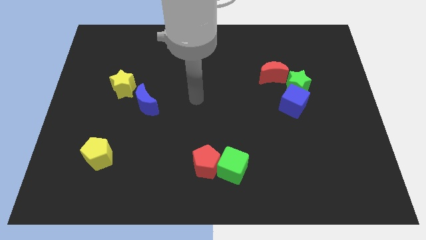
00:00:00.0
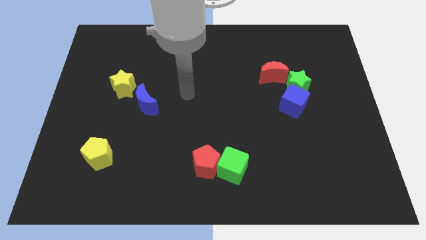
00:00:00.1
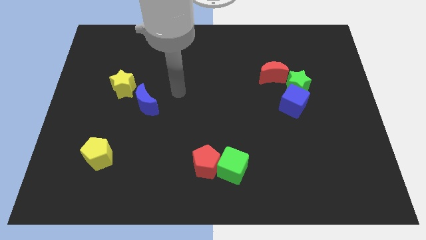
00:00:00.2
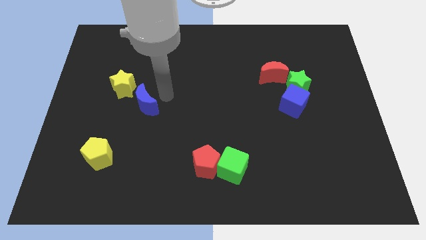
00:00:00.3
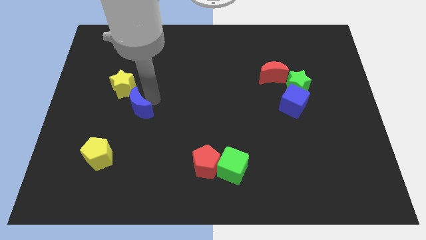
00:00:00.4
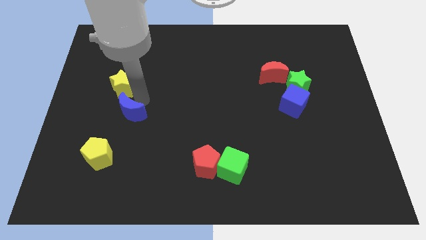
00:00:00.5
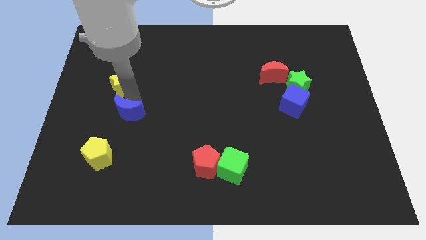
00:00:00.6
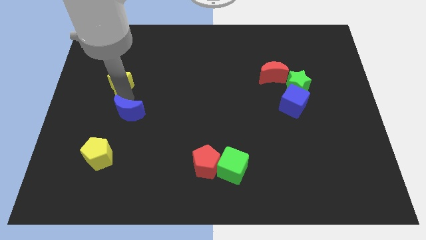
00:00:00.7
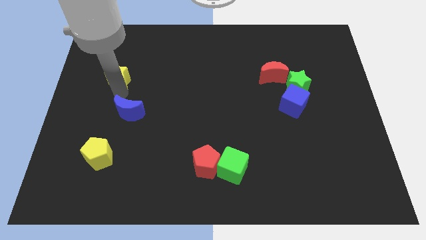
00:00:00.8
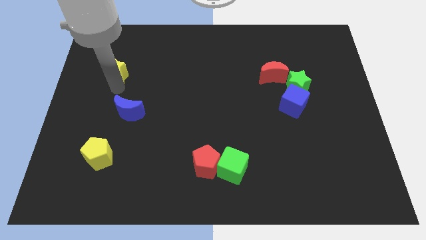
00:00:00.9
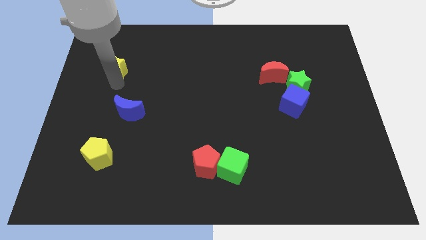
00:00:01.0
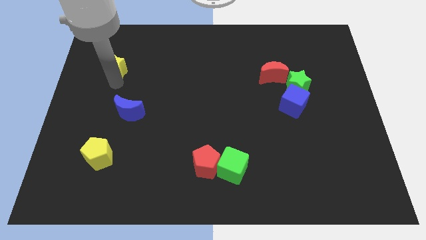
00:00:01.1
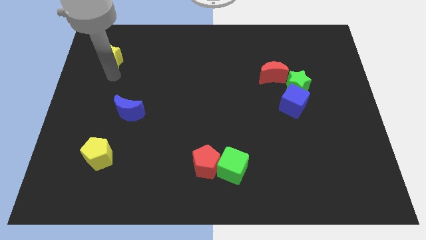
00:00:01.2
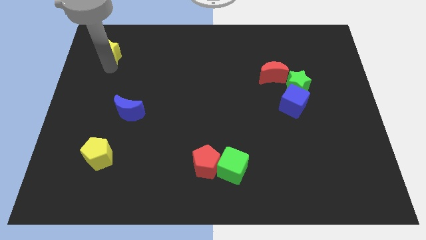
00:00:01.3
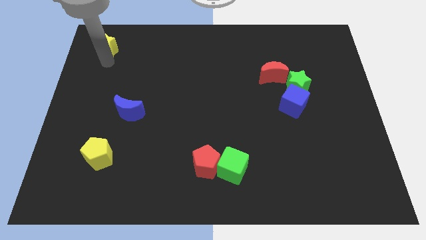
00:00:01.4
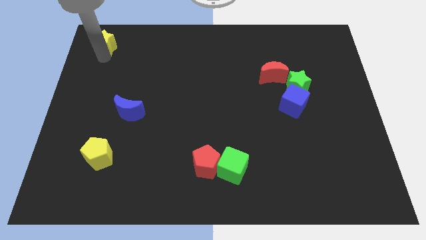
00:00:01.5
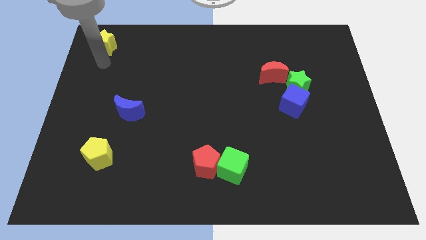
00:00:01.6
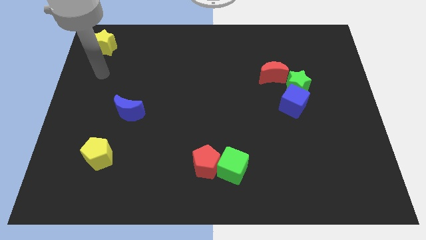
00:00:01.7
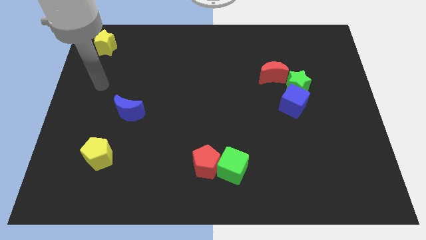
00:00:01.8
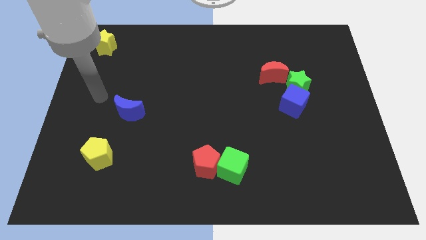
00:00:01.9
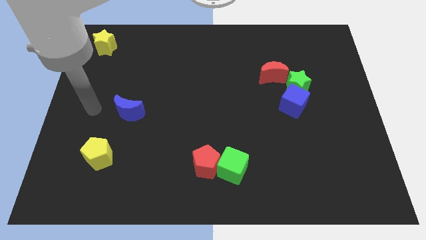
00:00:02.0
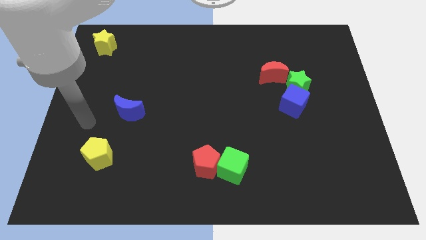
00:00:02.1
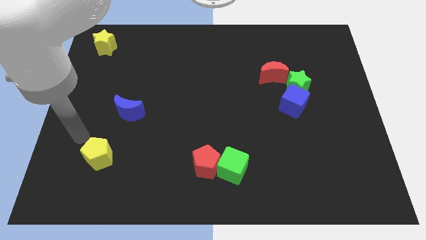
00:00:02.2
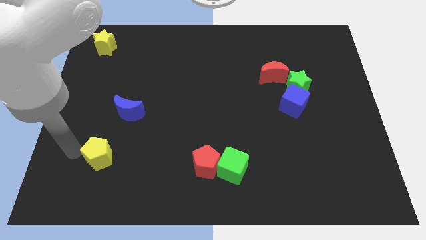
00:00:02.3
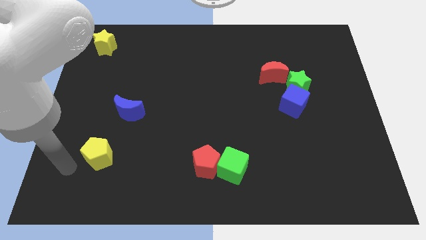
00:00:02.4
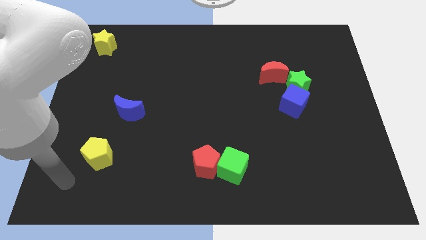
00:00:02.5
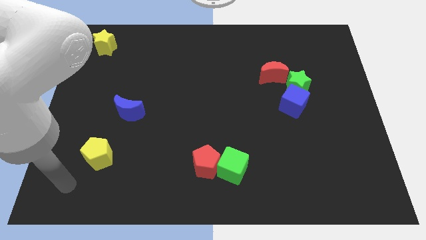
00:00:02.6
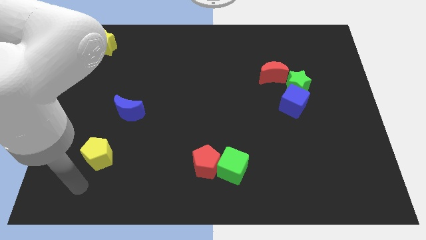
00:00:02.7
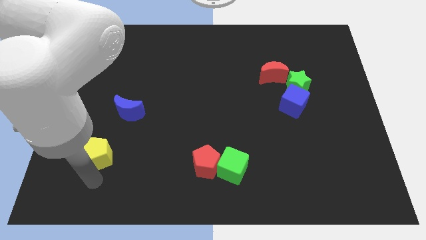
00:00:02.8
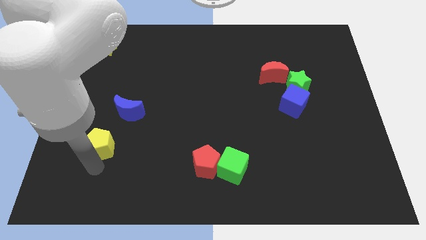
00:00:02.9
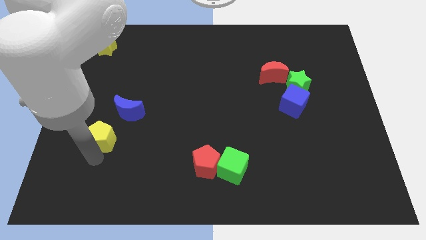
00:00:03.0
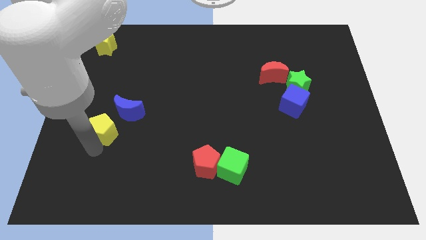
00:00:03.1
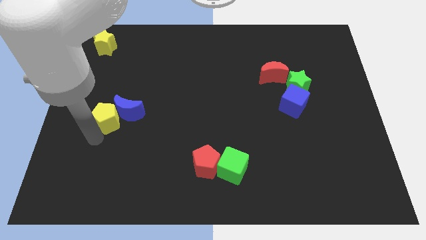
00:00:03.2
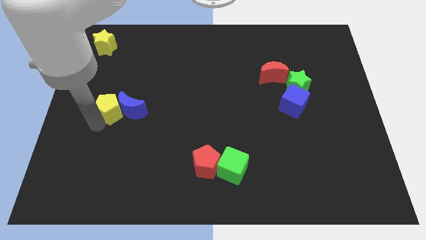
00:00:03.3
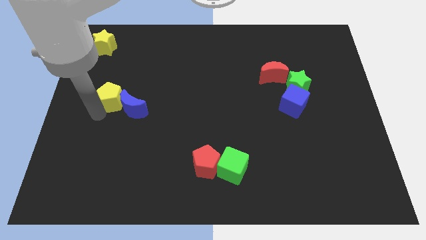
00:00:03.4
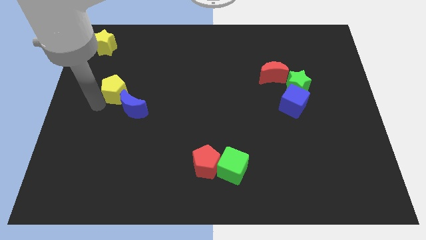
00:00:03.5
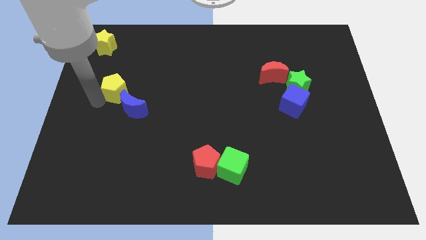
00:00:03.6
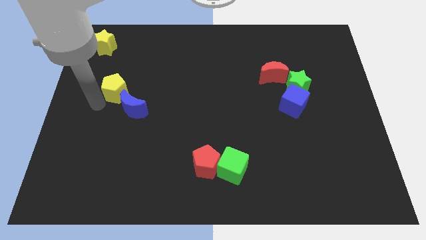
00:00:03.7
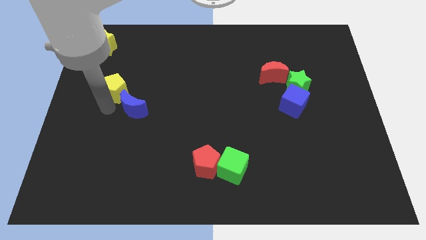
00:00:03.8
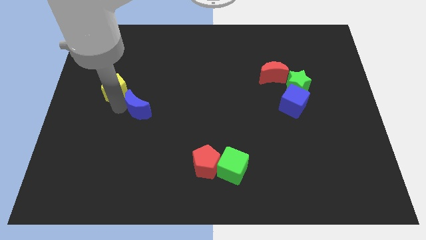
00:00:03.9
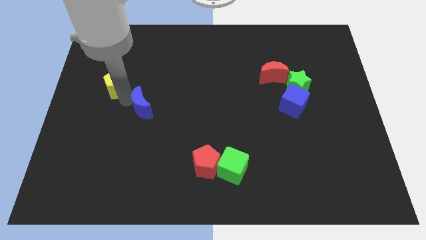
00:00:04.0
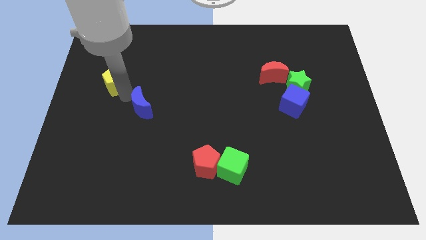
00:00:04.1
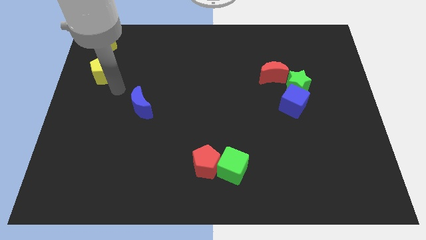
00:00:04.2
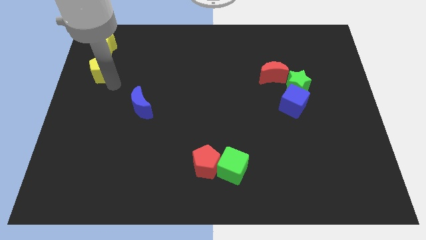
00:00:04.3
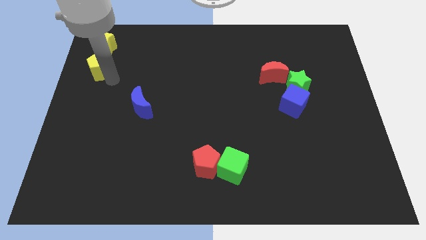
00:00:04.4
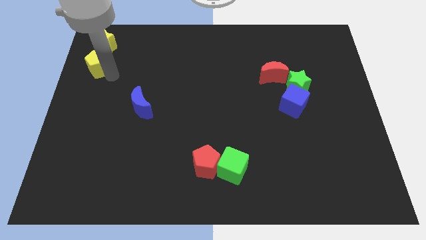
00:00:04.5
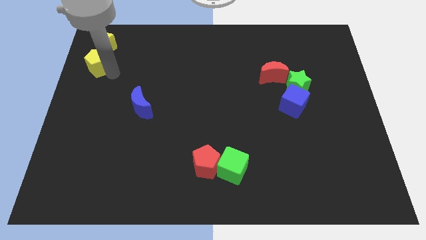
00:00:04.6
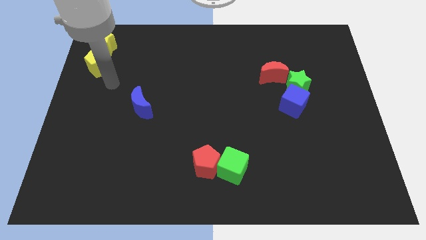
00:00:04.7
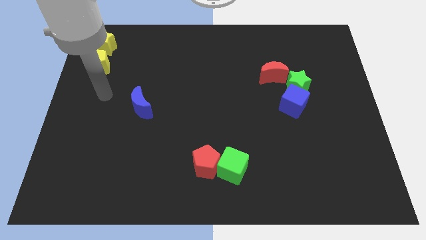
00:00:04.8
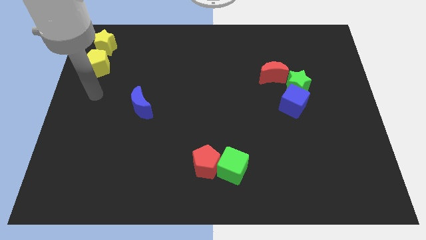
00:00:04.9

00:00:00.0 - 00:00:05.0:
place the yellow blocks to the top left of the board

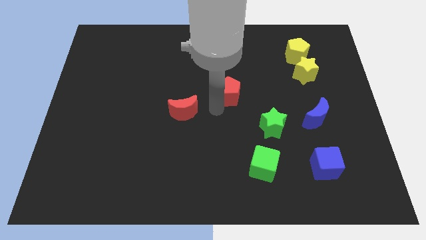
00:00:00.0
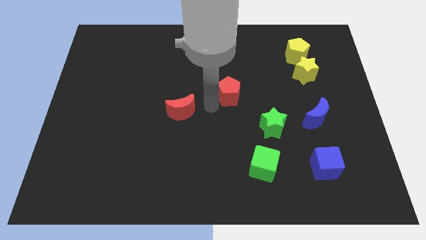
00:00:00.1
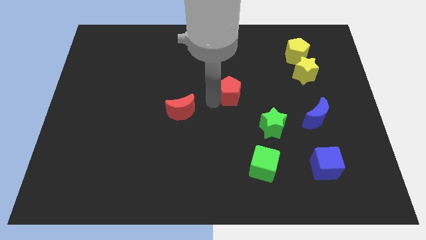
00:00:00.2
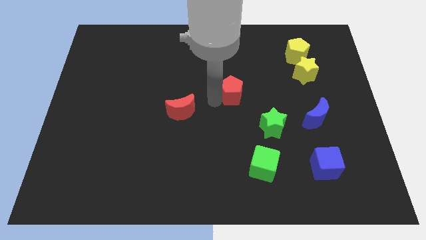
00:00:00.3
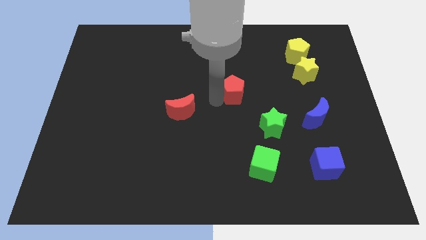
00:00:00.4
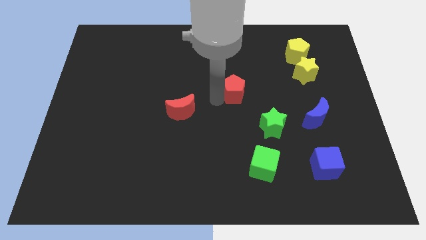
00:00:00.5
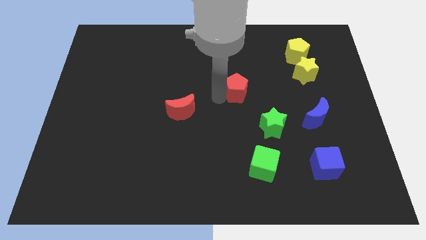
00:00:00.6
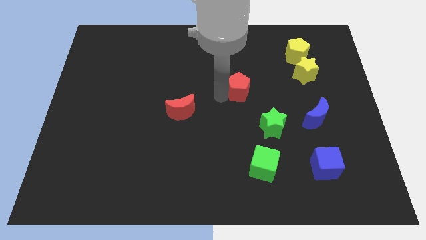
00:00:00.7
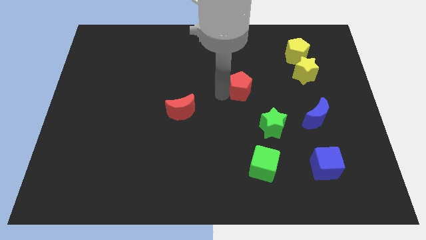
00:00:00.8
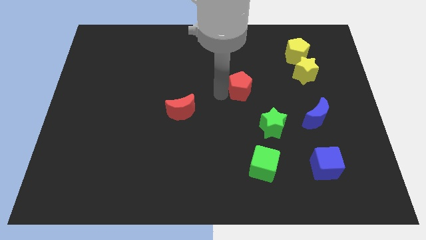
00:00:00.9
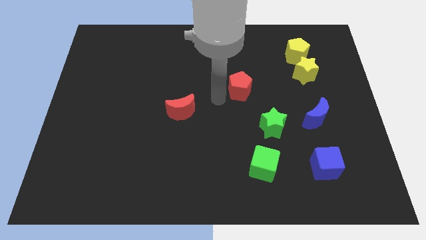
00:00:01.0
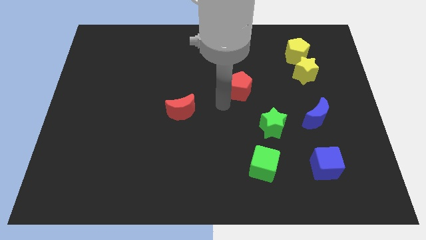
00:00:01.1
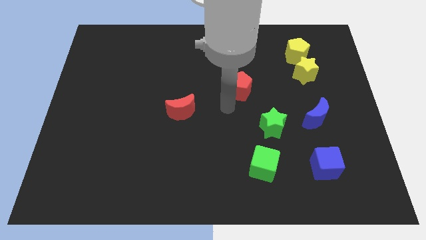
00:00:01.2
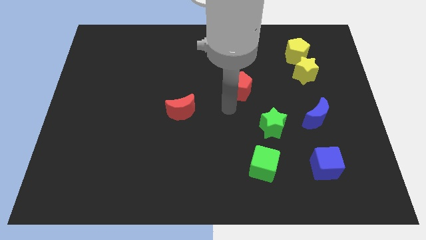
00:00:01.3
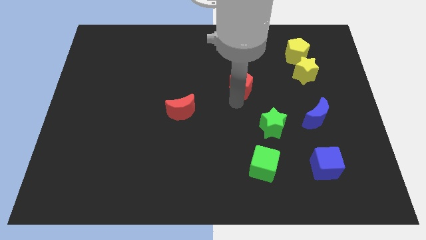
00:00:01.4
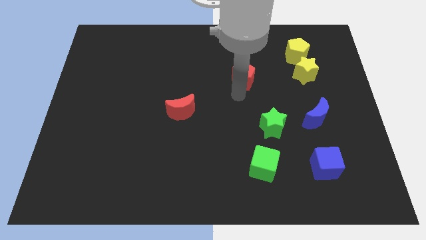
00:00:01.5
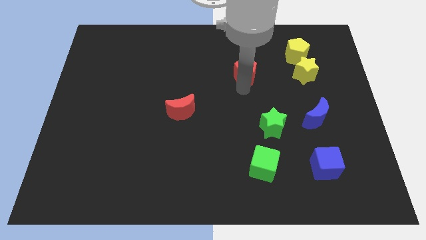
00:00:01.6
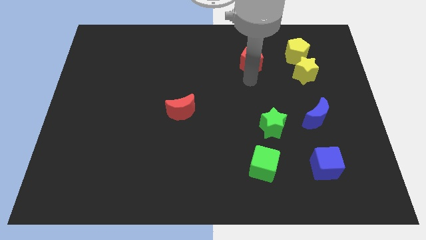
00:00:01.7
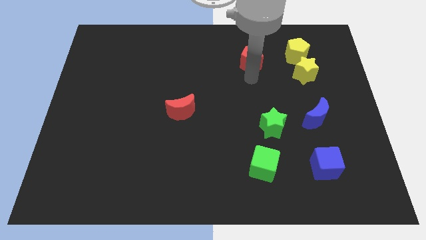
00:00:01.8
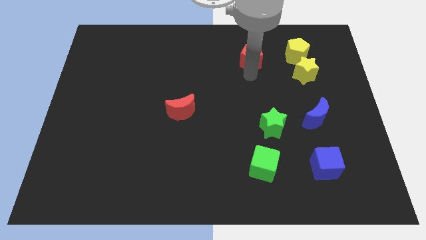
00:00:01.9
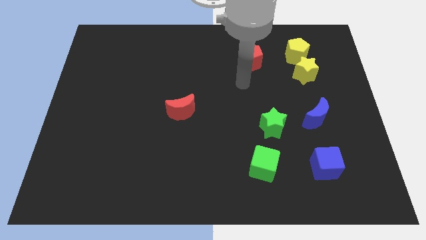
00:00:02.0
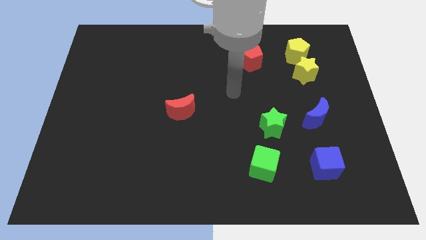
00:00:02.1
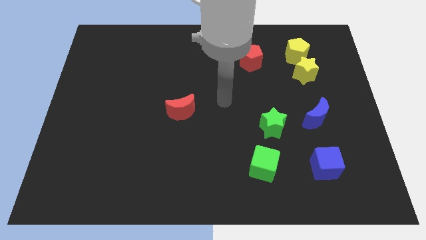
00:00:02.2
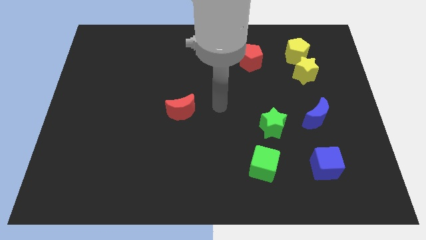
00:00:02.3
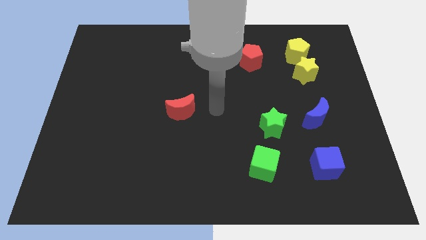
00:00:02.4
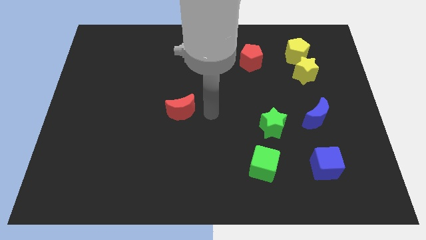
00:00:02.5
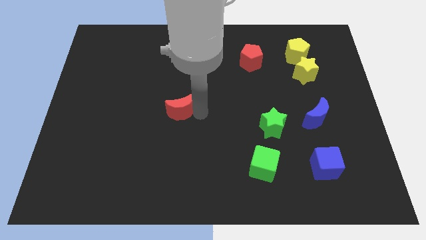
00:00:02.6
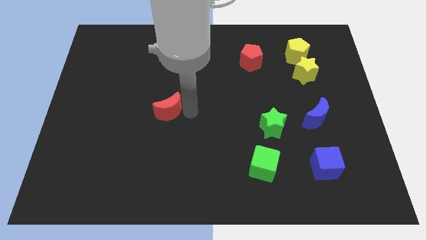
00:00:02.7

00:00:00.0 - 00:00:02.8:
place the red pentagon left to the yellow pentagon

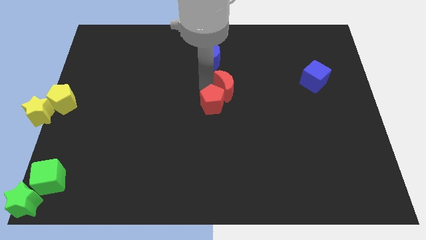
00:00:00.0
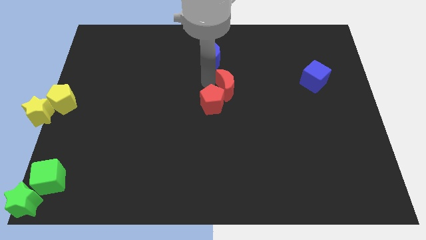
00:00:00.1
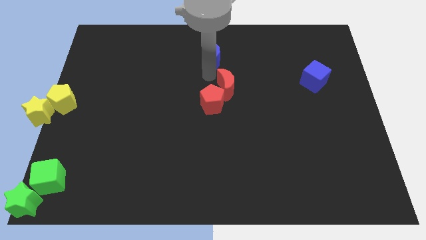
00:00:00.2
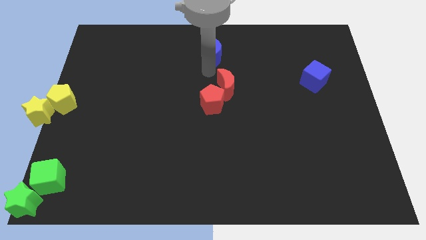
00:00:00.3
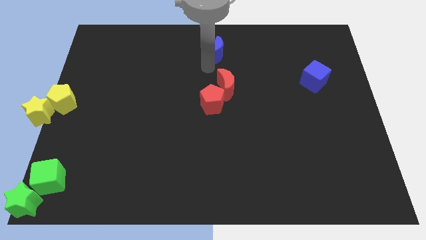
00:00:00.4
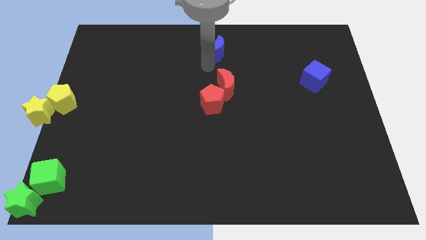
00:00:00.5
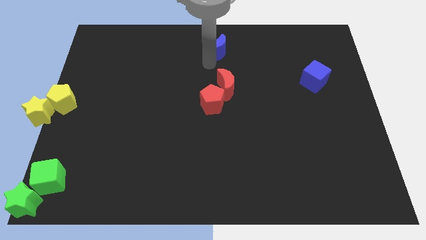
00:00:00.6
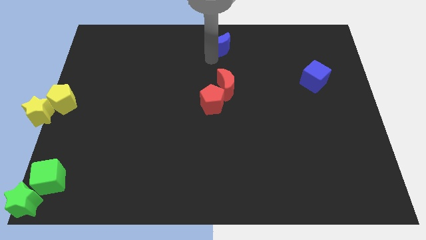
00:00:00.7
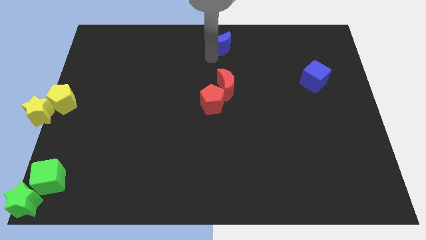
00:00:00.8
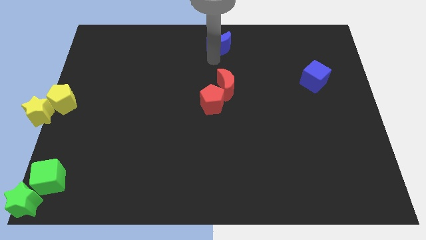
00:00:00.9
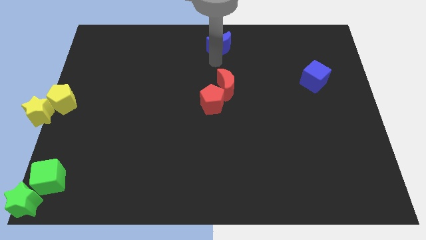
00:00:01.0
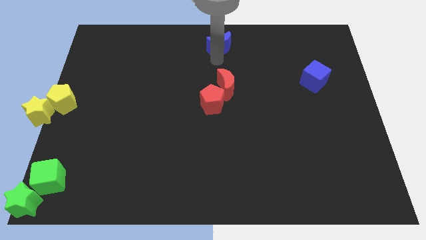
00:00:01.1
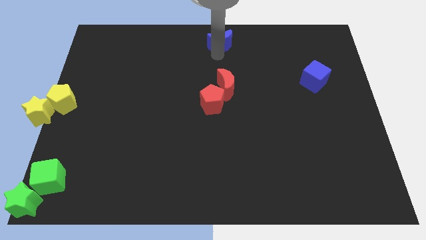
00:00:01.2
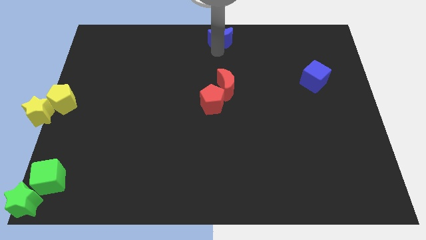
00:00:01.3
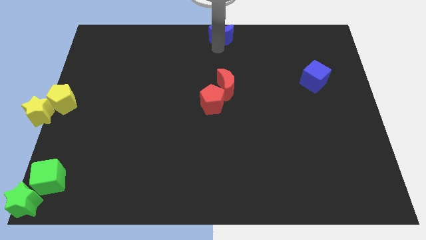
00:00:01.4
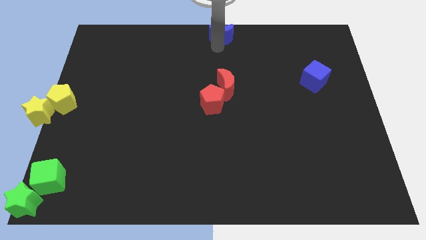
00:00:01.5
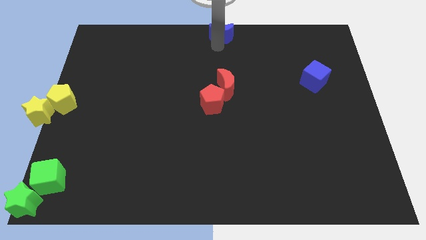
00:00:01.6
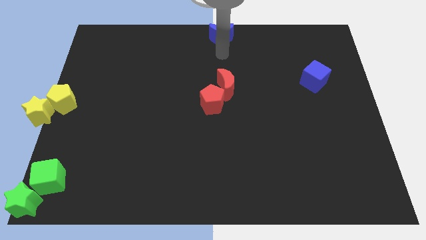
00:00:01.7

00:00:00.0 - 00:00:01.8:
adjust the blue crescent at the top center of the board
